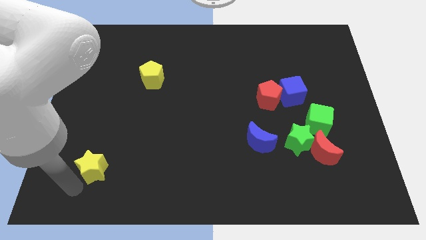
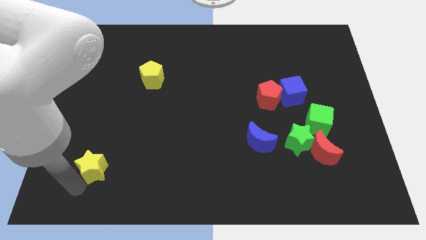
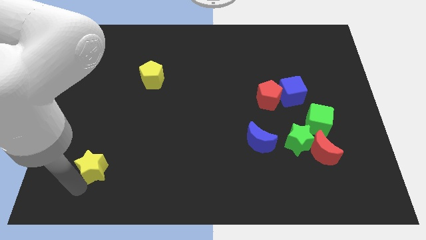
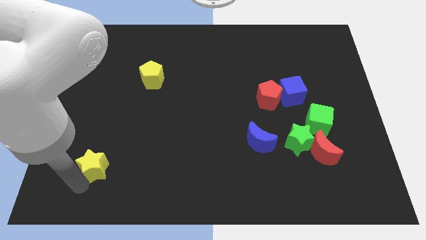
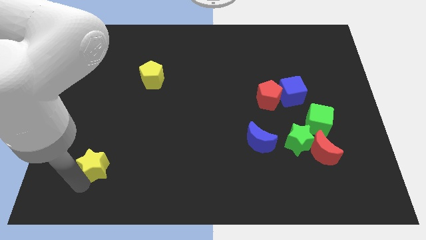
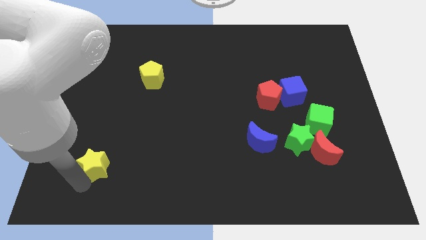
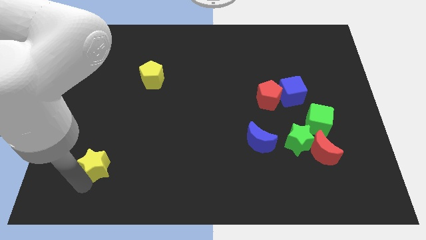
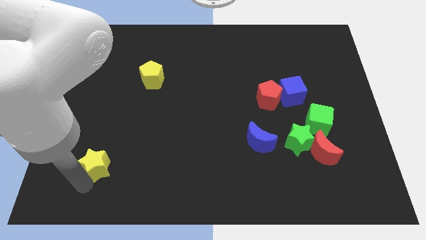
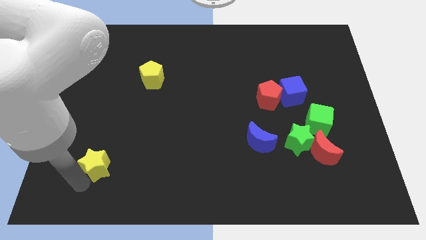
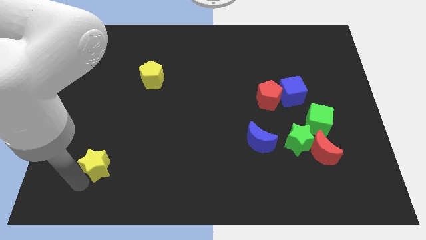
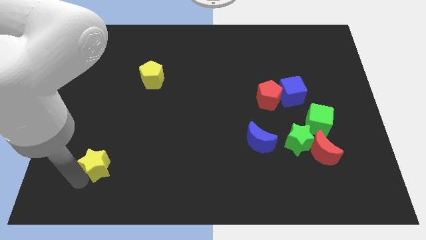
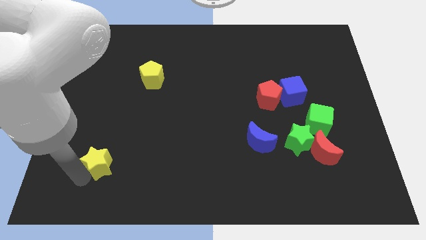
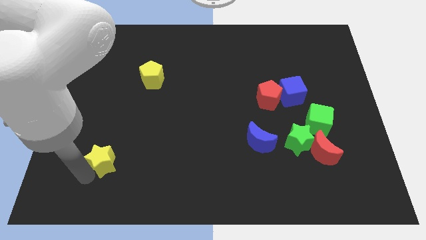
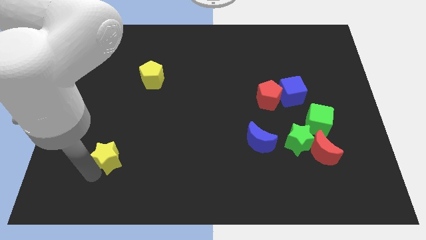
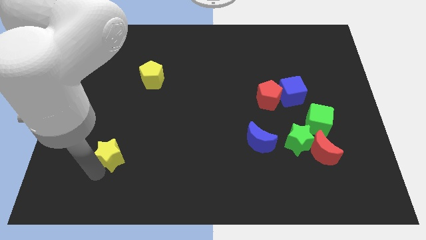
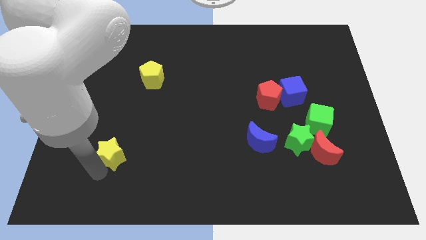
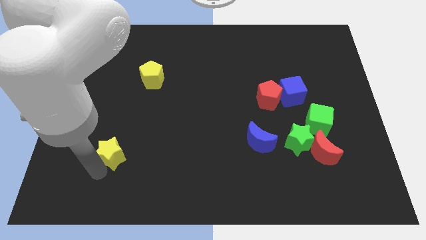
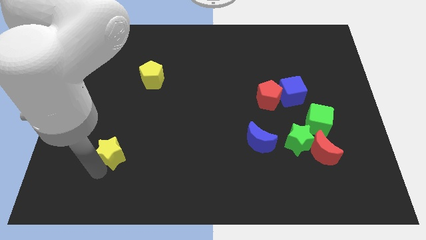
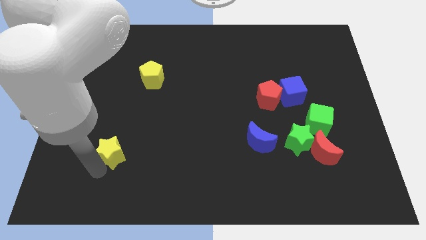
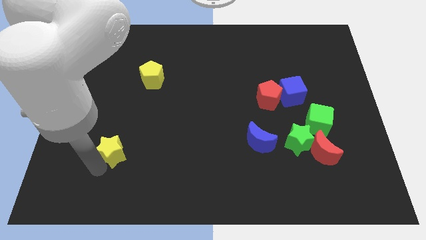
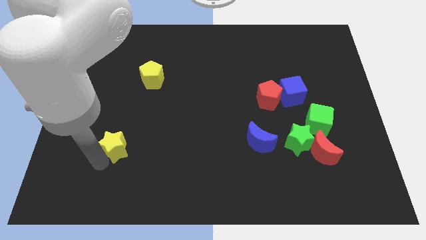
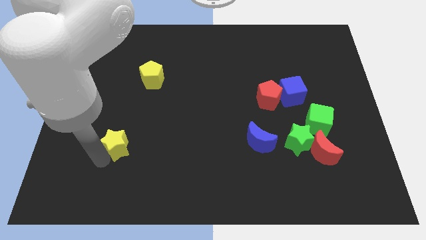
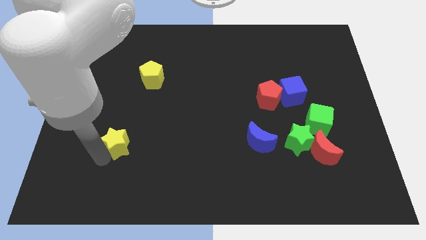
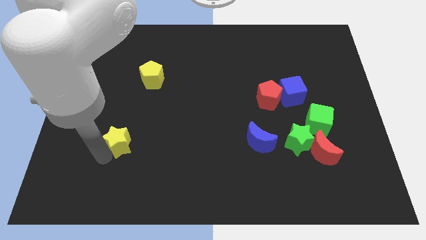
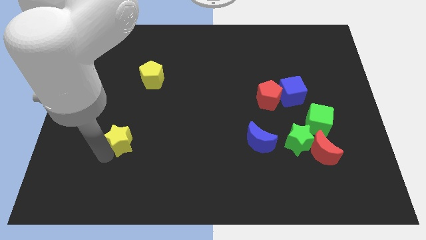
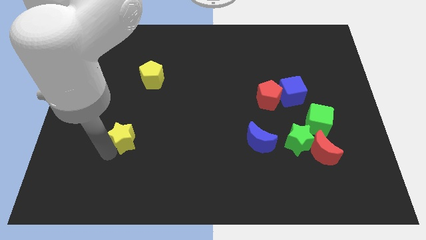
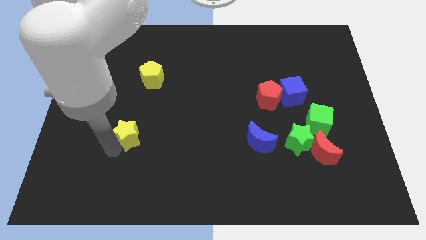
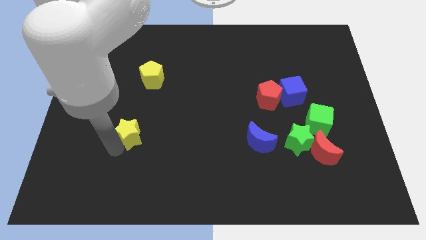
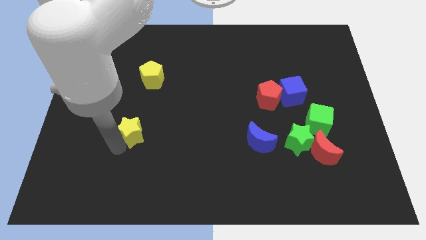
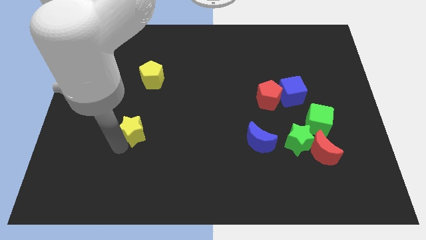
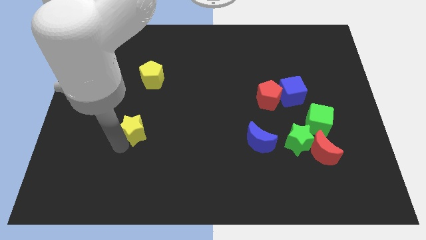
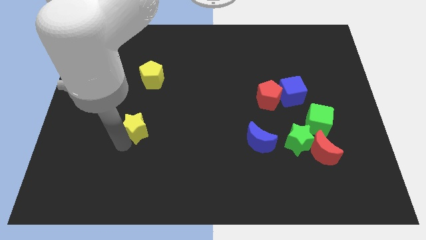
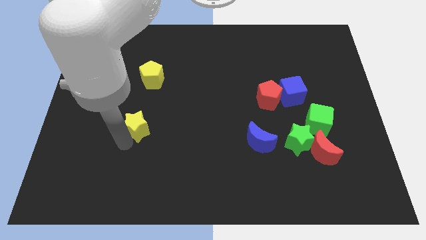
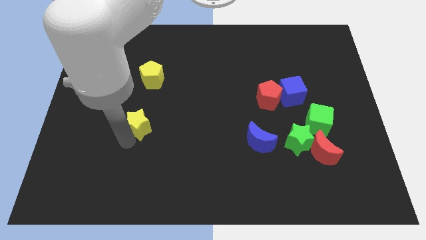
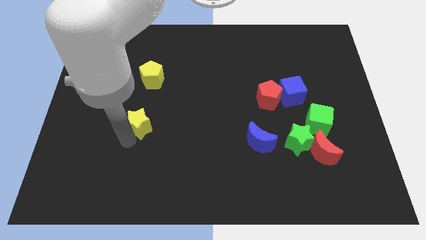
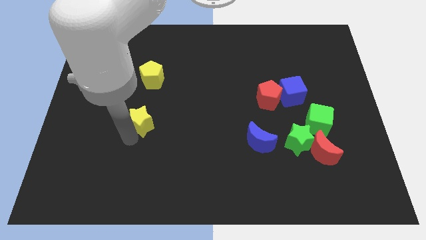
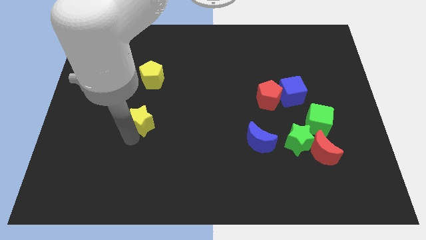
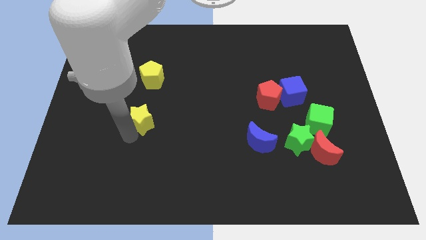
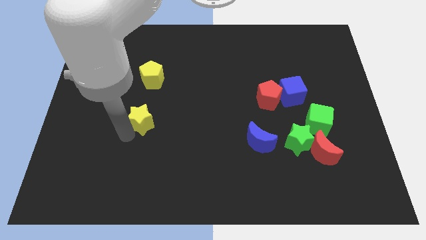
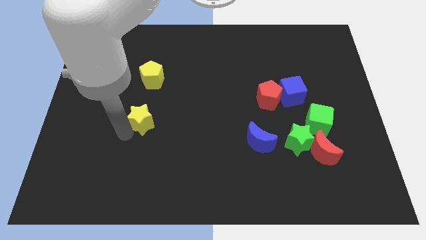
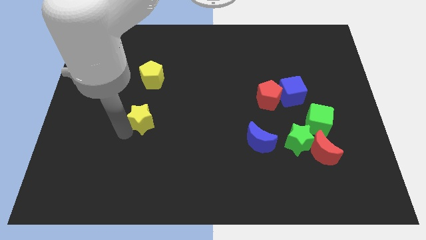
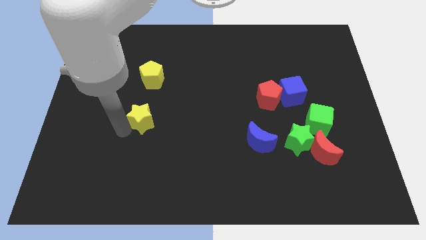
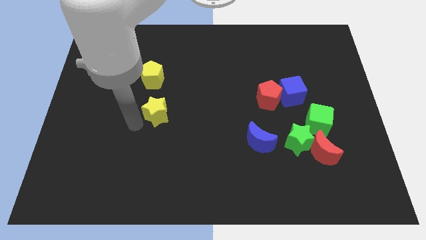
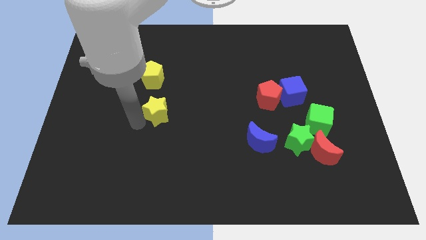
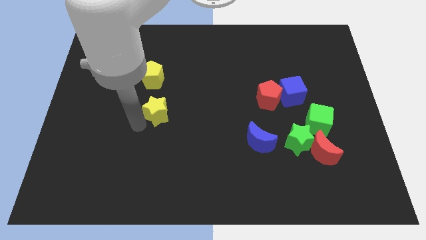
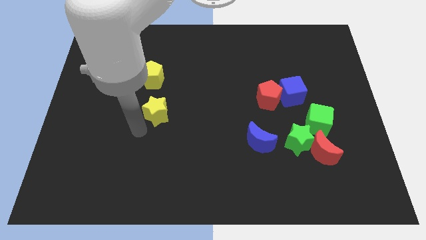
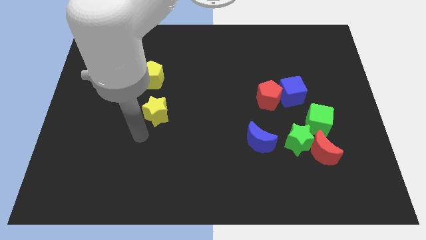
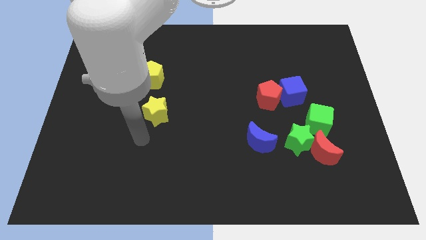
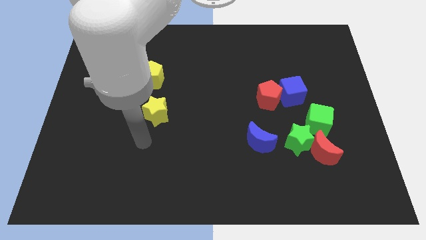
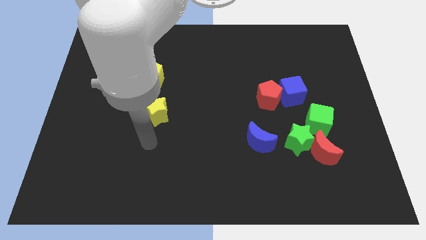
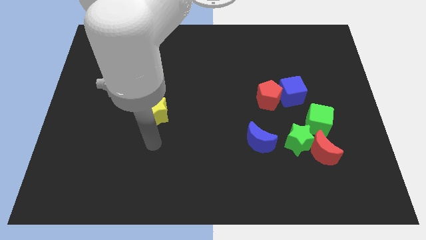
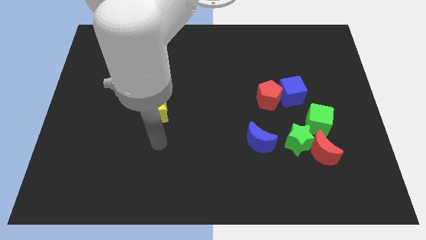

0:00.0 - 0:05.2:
push the yellow star to the bottom side of the yellow pentagon

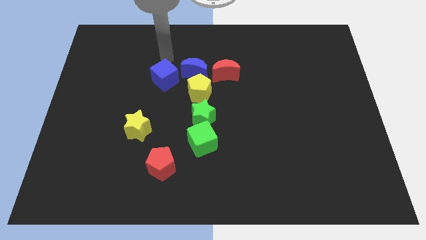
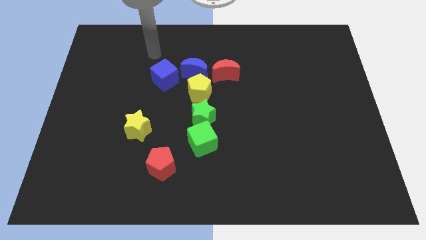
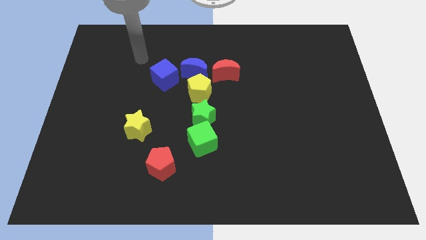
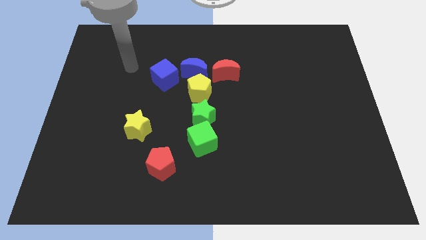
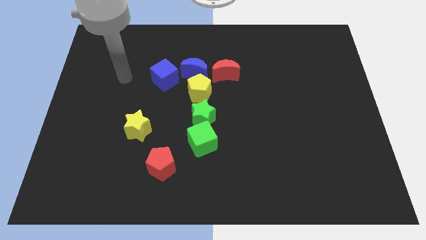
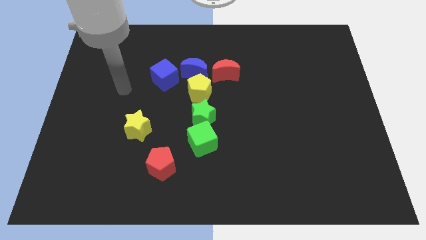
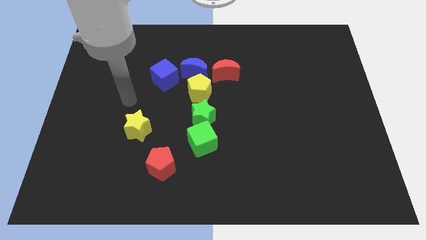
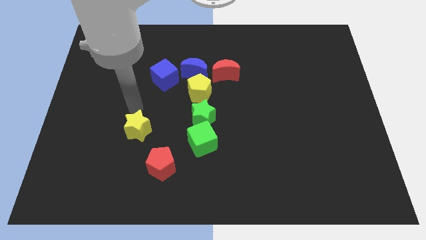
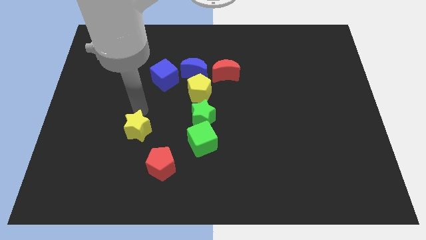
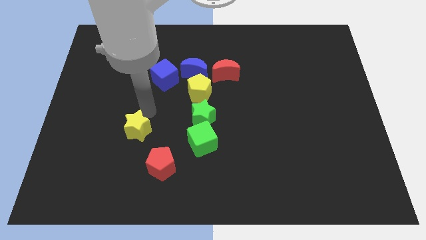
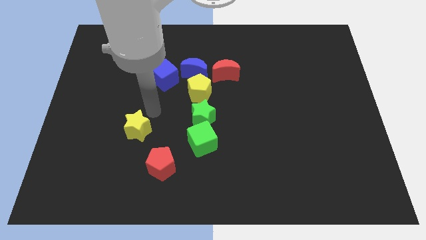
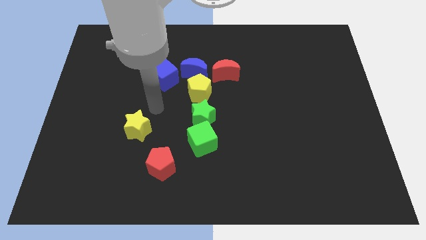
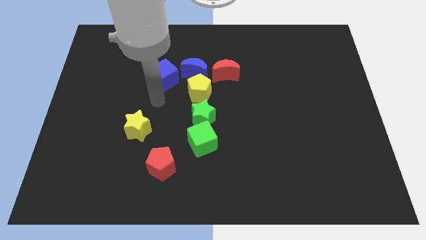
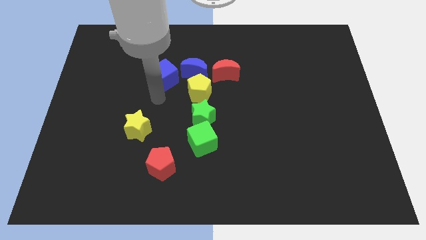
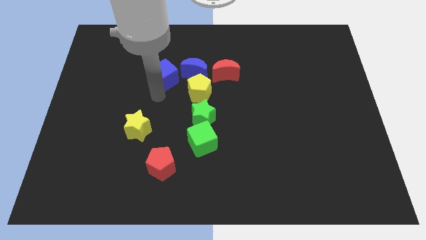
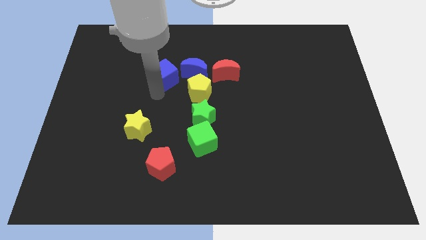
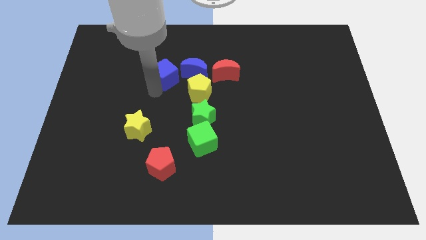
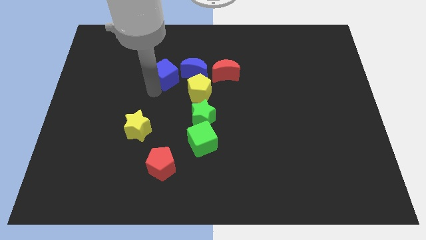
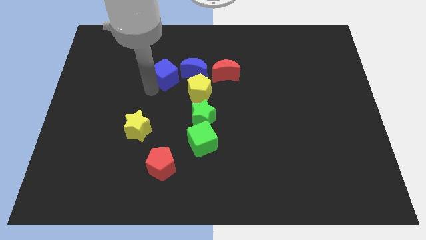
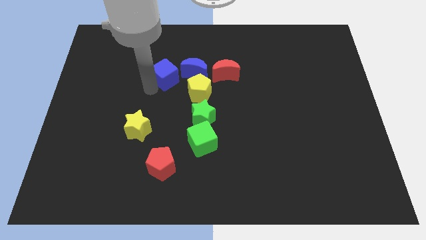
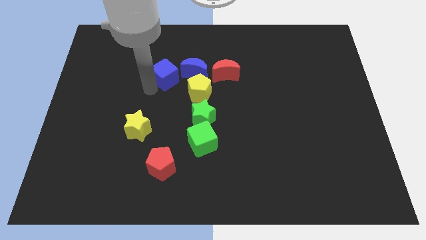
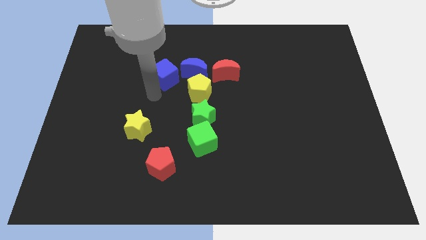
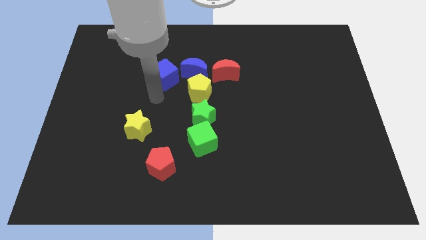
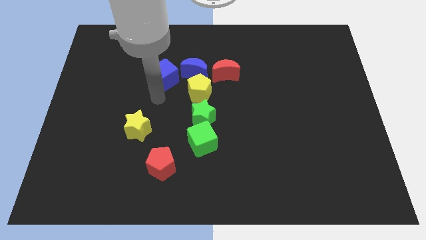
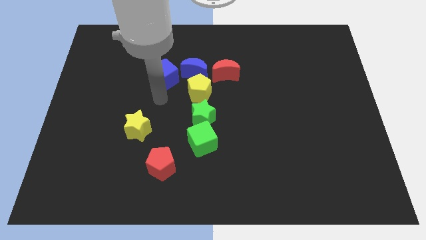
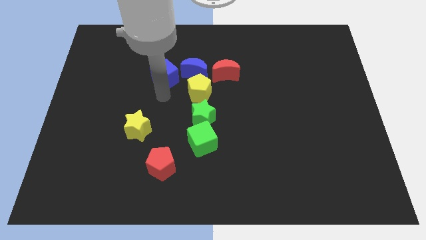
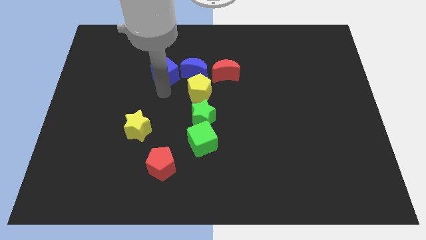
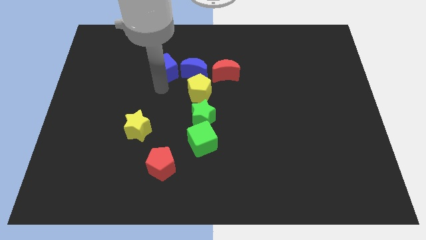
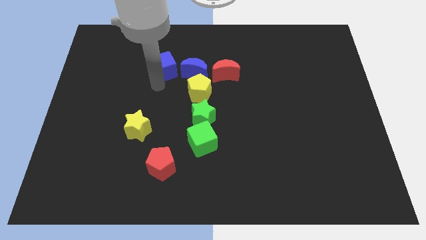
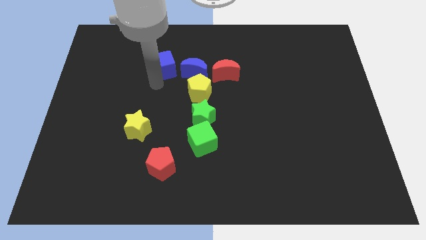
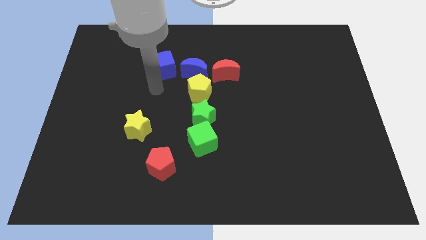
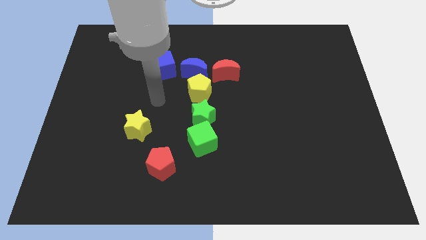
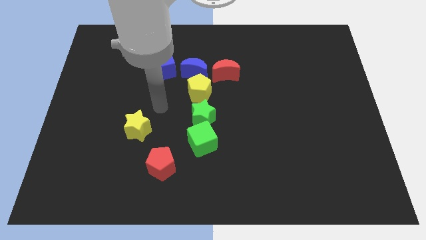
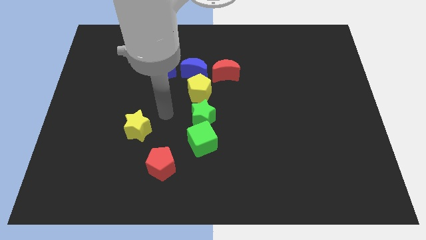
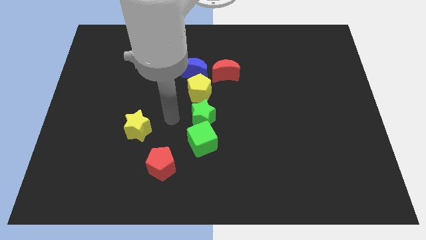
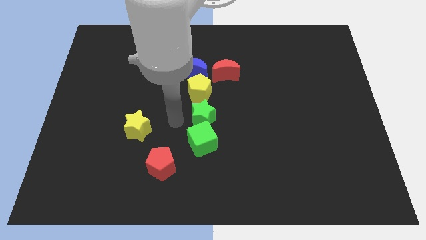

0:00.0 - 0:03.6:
adjust the blue cube to form a horizontal line

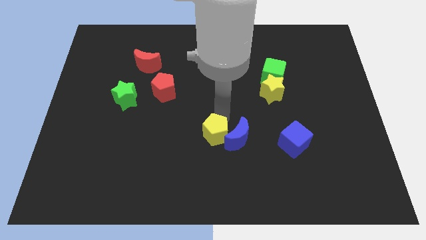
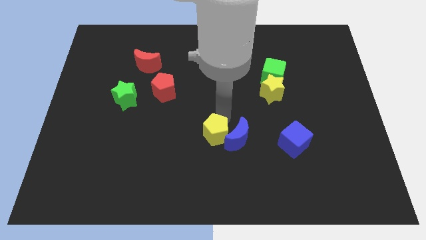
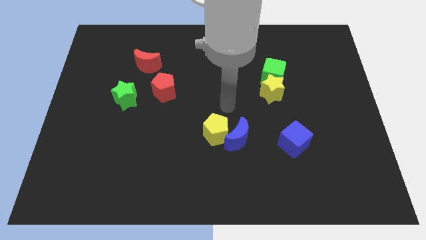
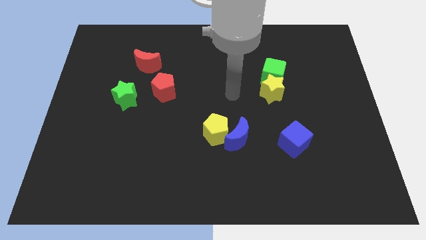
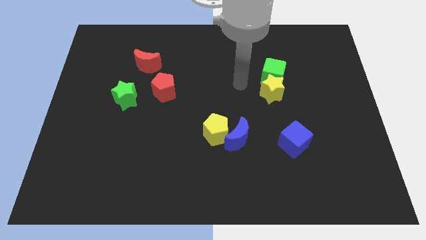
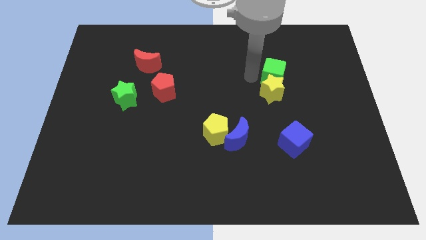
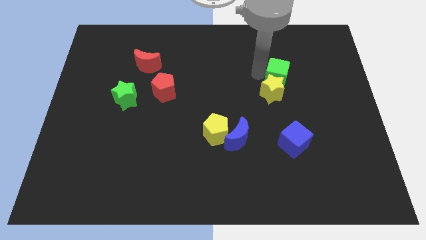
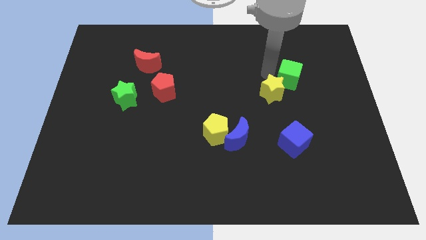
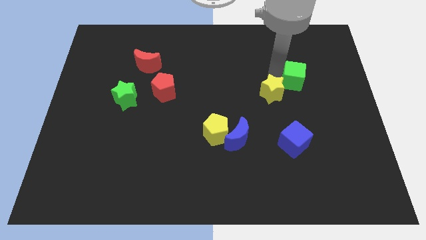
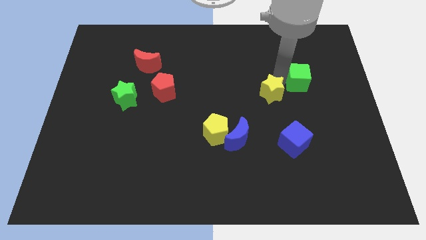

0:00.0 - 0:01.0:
move the green cube slightly to the right
